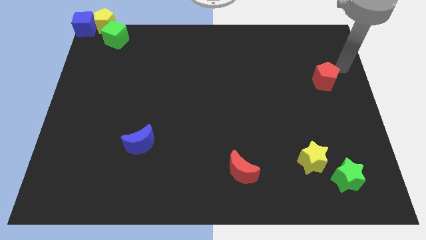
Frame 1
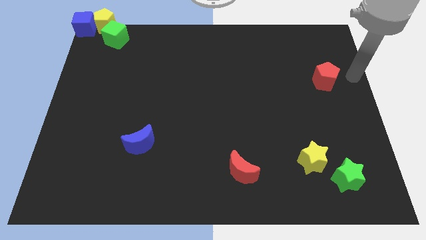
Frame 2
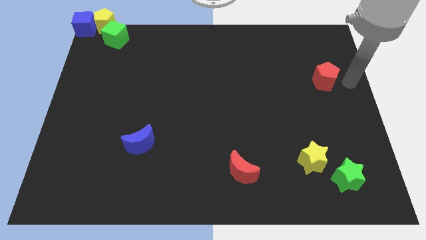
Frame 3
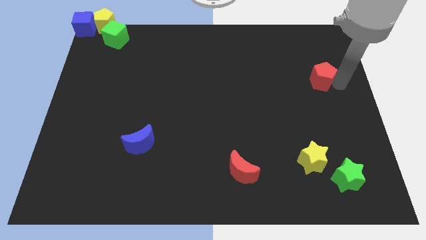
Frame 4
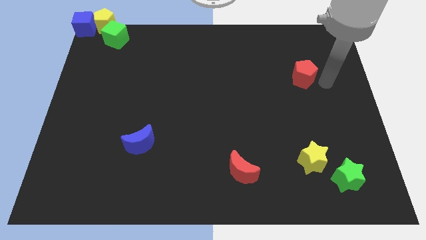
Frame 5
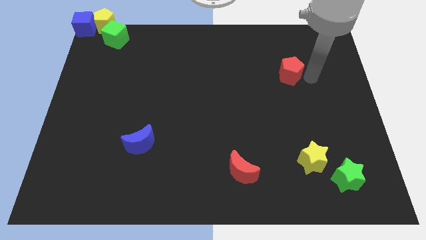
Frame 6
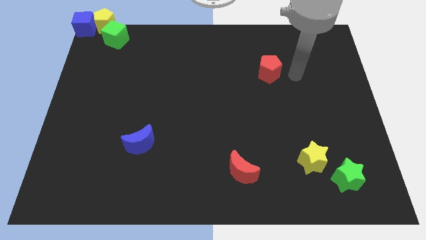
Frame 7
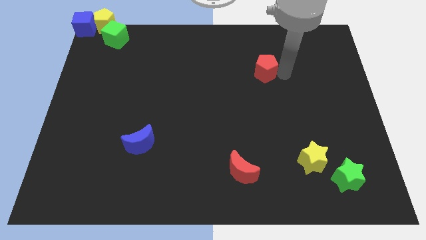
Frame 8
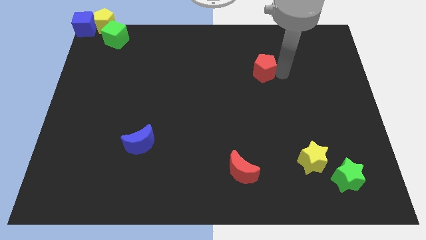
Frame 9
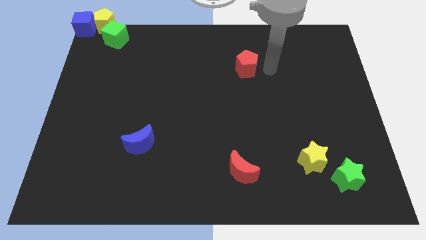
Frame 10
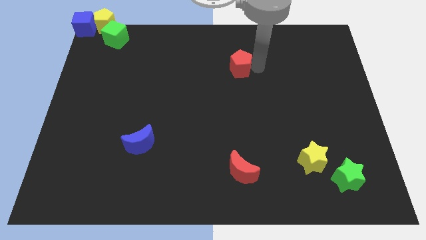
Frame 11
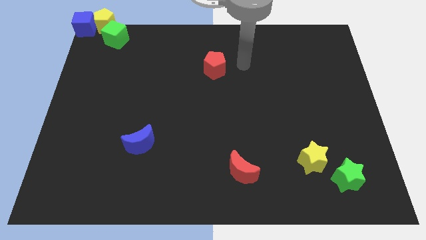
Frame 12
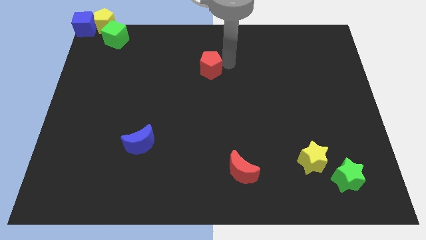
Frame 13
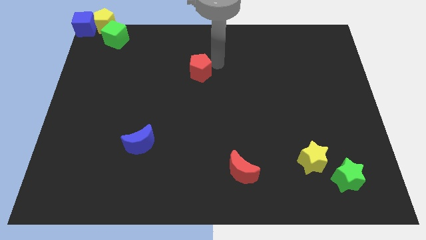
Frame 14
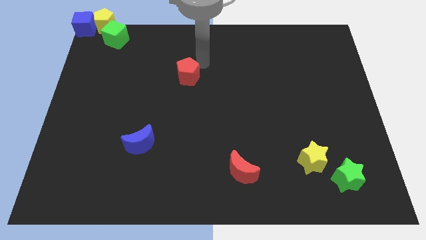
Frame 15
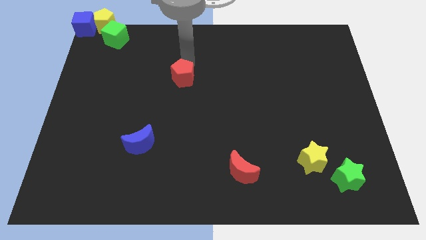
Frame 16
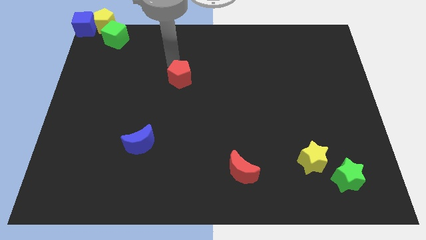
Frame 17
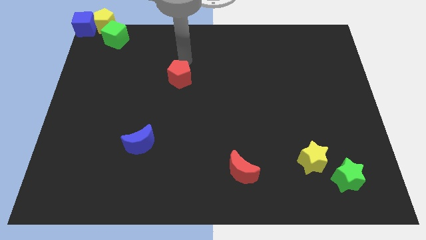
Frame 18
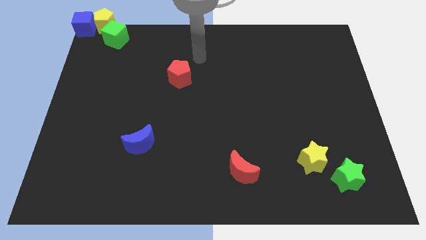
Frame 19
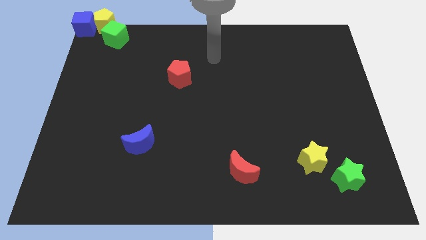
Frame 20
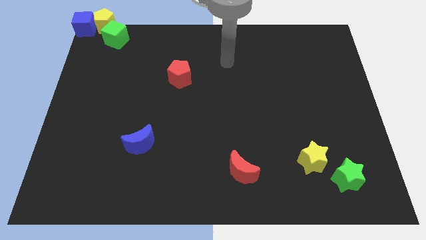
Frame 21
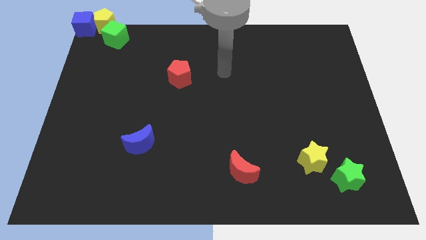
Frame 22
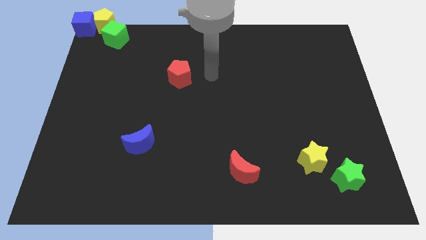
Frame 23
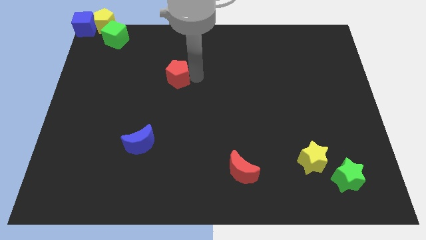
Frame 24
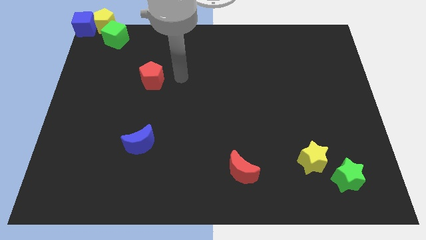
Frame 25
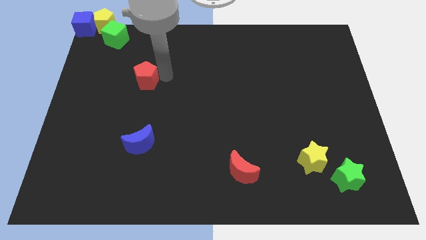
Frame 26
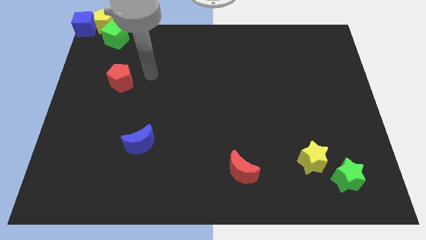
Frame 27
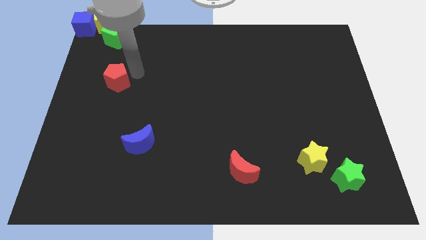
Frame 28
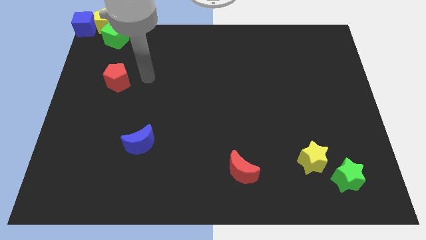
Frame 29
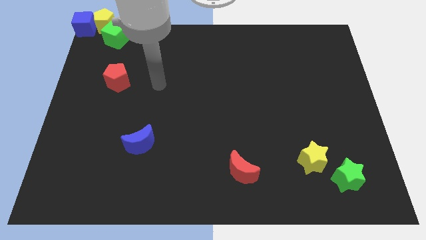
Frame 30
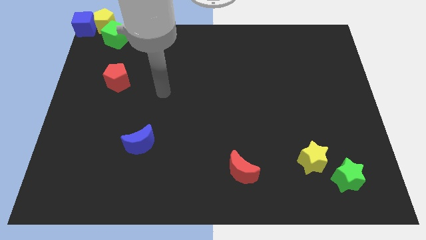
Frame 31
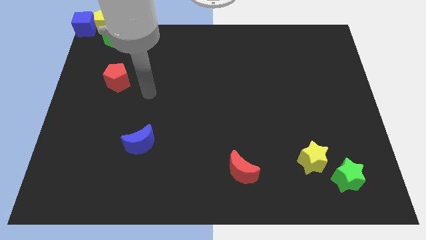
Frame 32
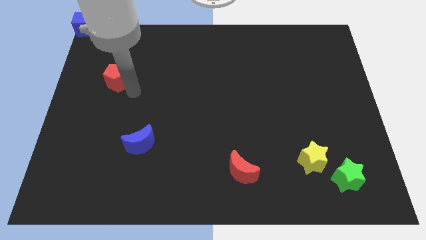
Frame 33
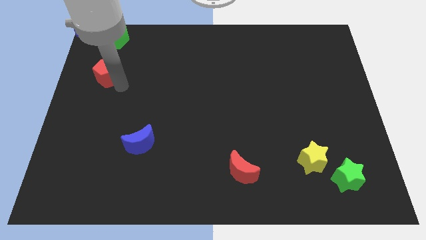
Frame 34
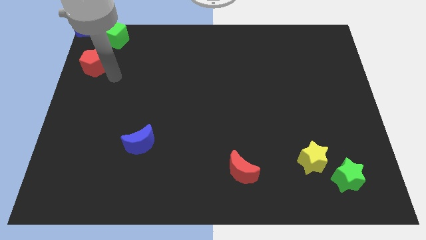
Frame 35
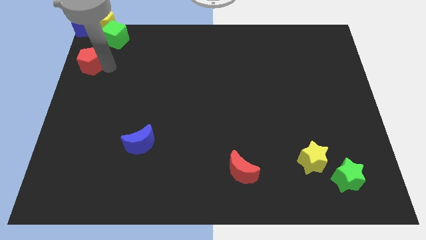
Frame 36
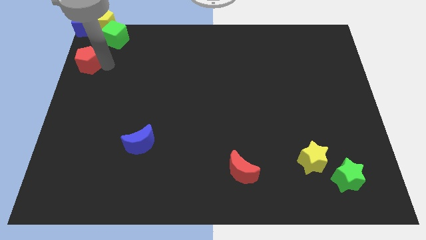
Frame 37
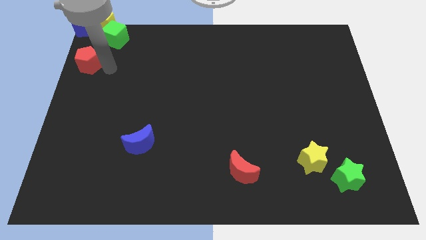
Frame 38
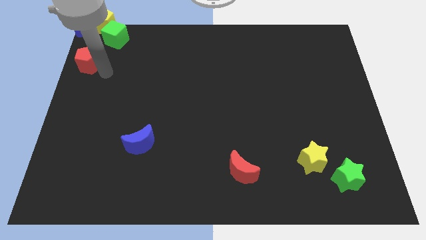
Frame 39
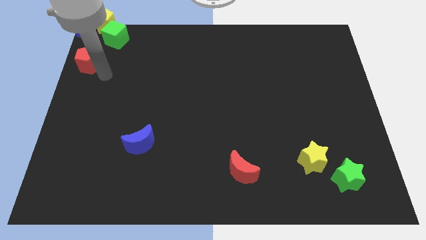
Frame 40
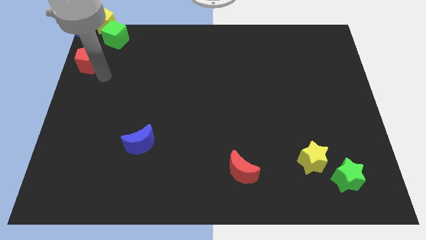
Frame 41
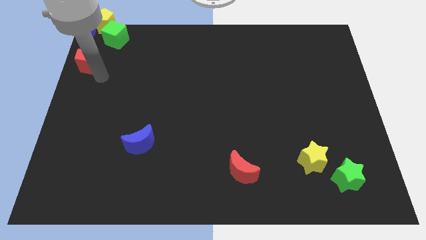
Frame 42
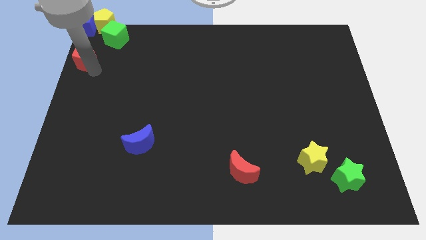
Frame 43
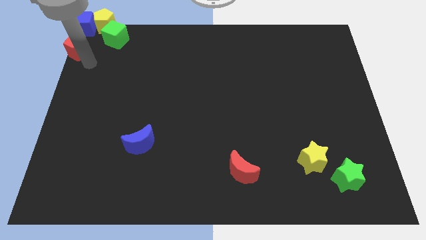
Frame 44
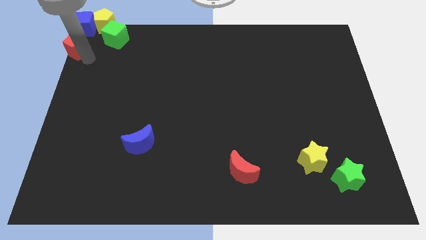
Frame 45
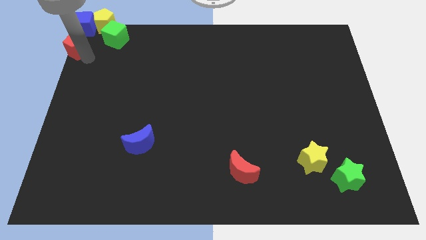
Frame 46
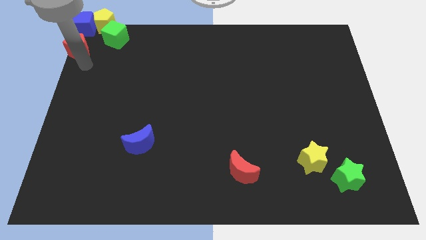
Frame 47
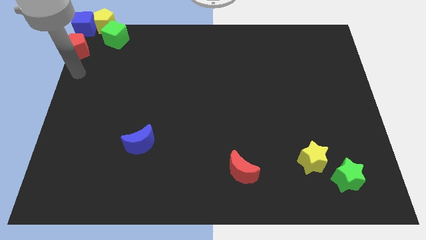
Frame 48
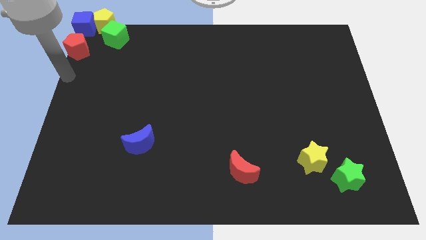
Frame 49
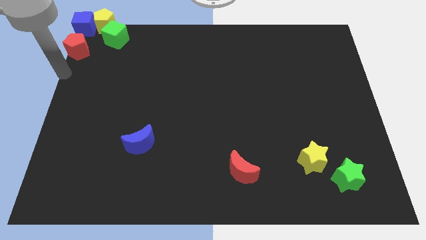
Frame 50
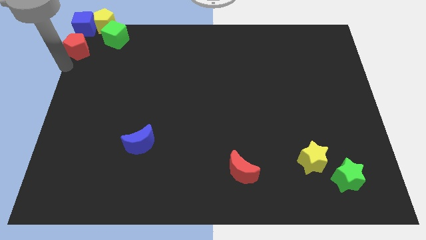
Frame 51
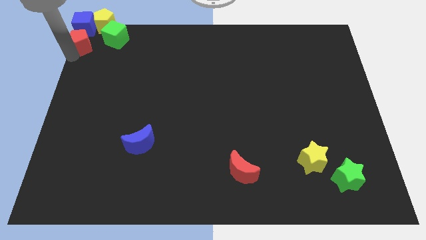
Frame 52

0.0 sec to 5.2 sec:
push the red pentagon to the top left corner

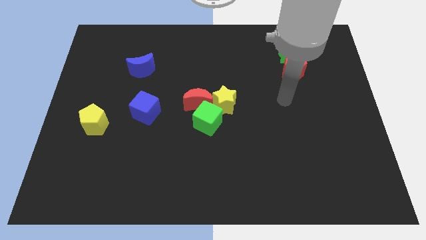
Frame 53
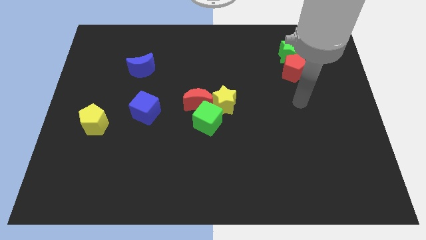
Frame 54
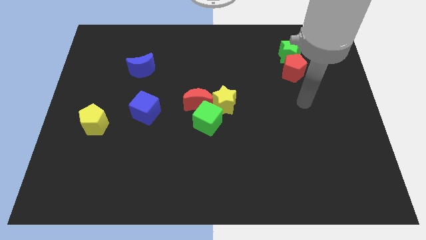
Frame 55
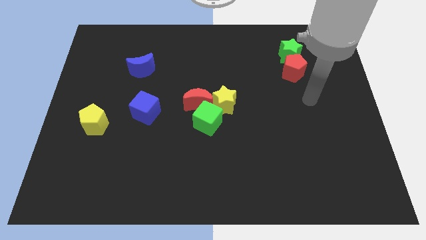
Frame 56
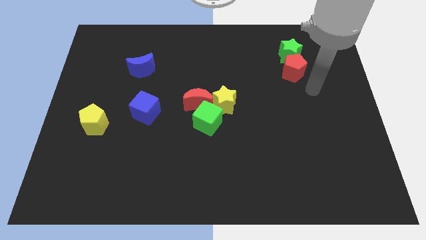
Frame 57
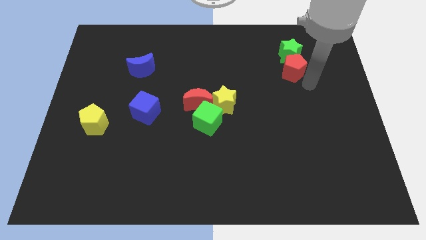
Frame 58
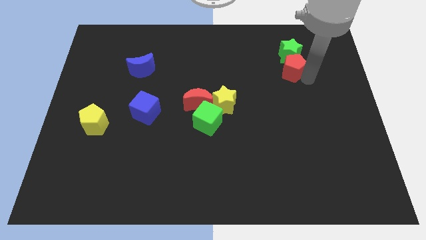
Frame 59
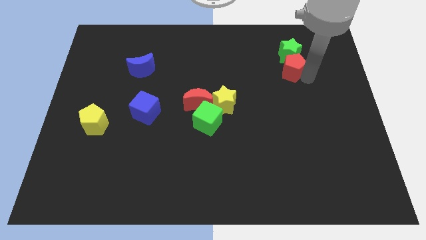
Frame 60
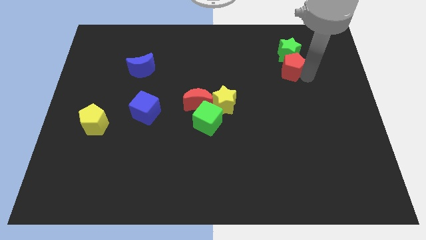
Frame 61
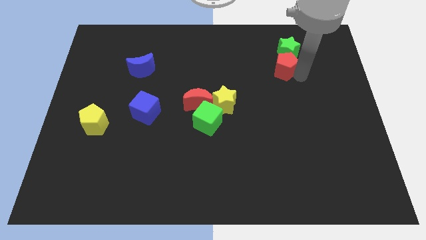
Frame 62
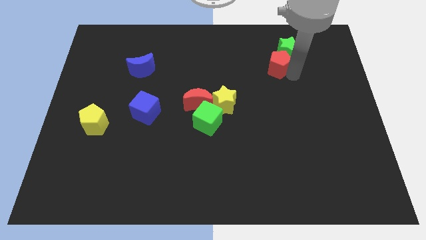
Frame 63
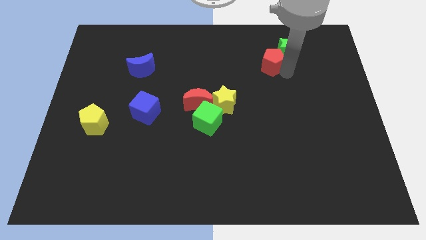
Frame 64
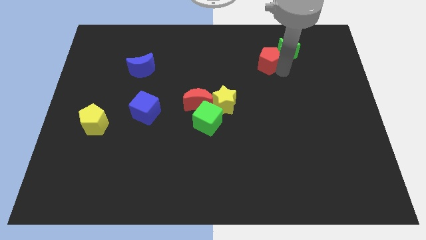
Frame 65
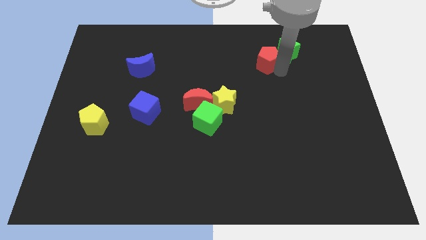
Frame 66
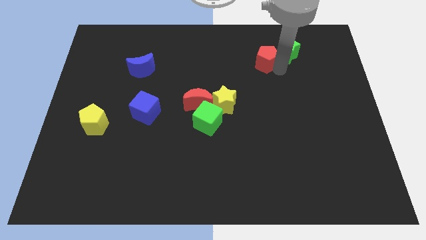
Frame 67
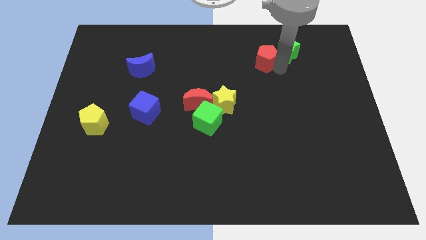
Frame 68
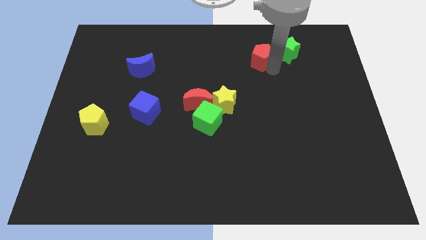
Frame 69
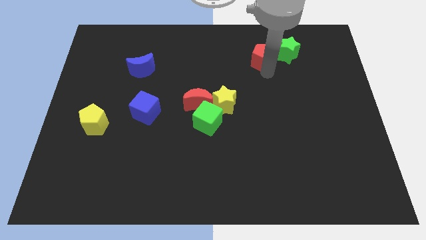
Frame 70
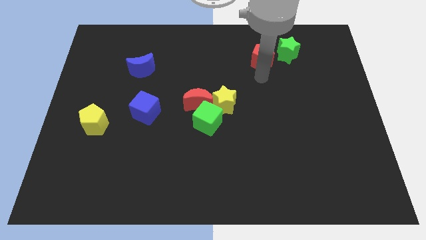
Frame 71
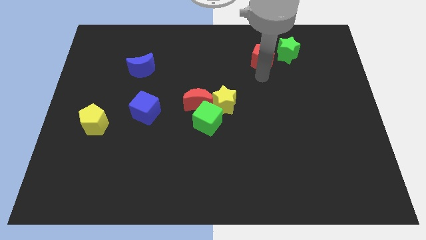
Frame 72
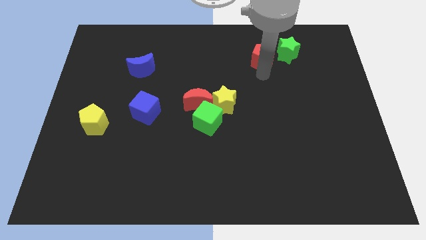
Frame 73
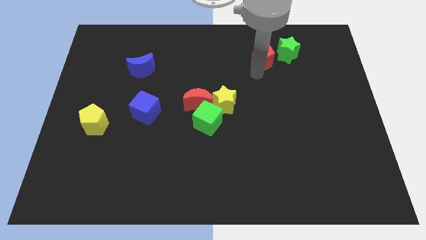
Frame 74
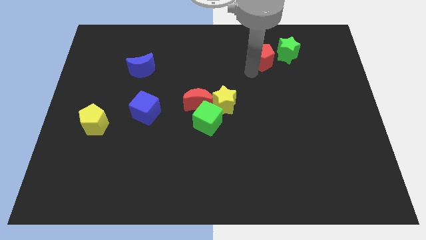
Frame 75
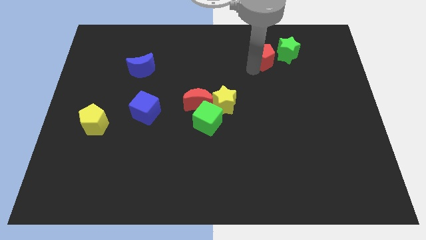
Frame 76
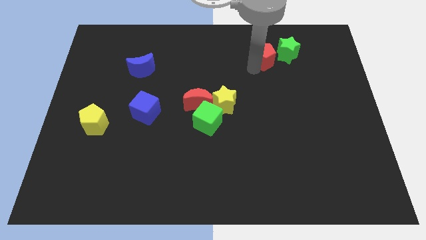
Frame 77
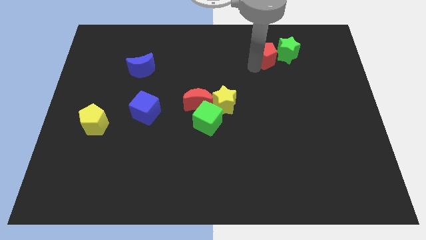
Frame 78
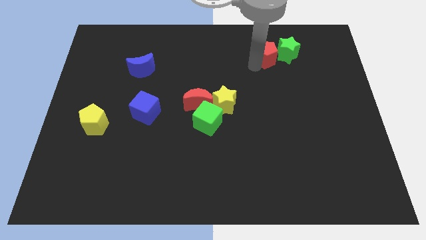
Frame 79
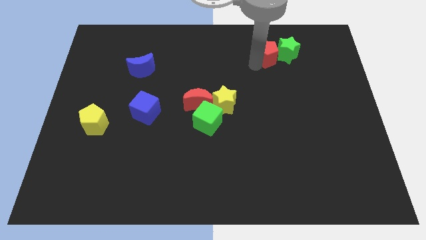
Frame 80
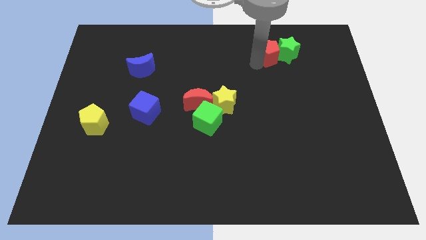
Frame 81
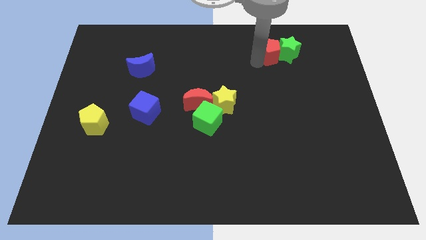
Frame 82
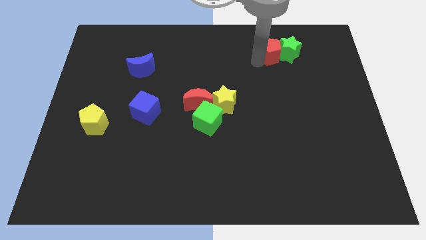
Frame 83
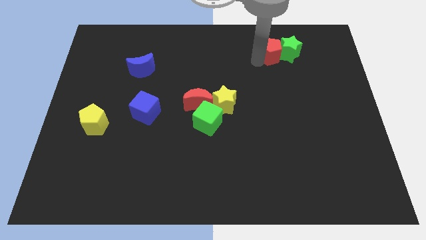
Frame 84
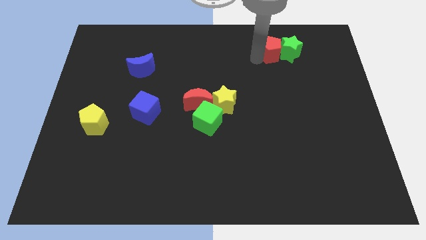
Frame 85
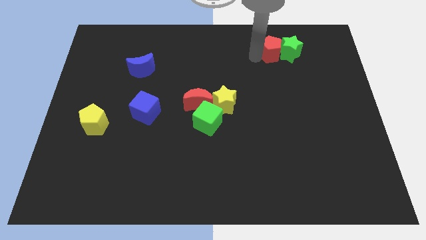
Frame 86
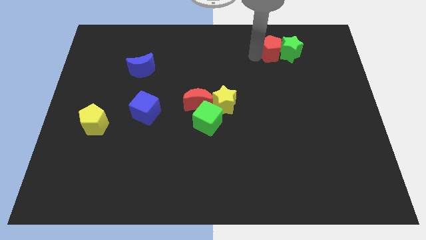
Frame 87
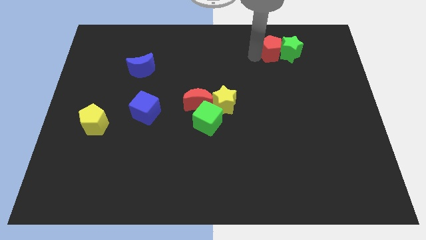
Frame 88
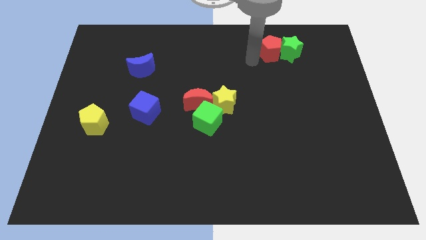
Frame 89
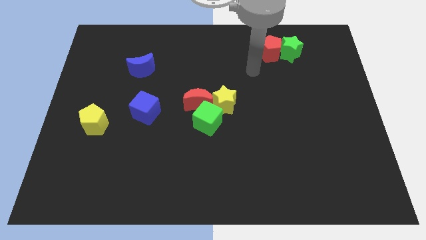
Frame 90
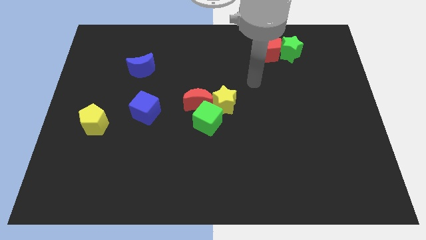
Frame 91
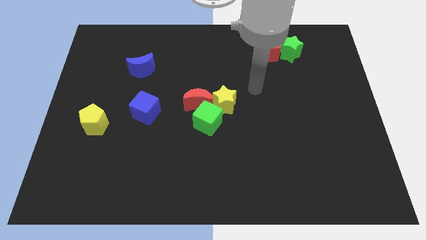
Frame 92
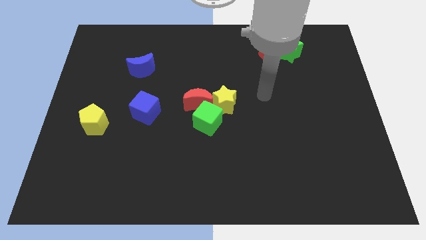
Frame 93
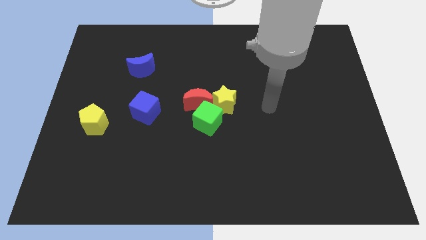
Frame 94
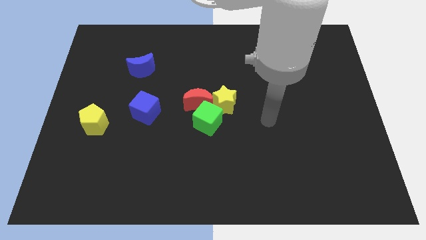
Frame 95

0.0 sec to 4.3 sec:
move the red pentagon left to the green star
